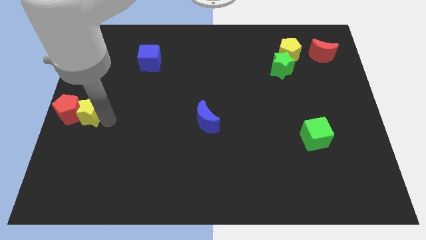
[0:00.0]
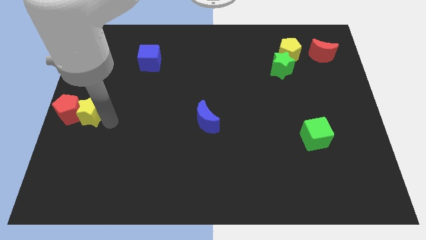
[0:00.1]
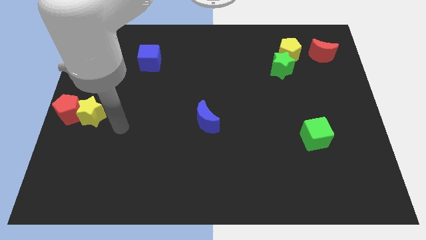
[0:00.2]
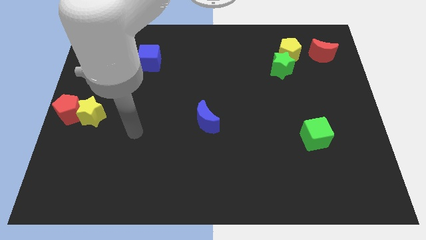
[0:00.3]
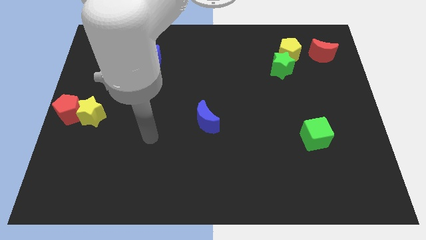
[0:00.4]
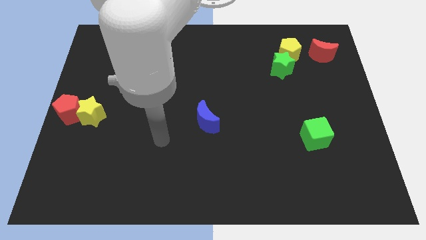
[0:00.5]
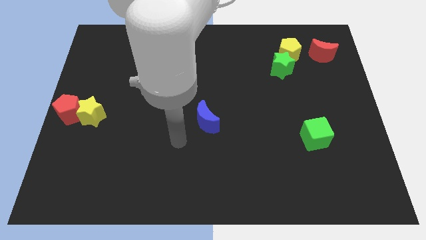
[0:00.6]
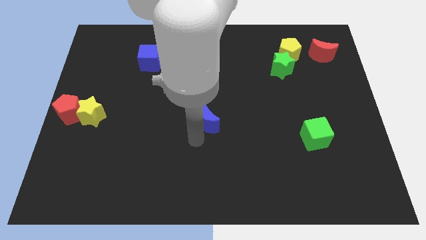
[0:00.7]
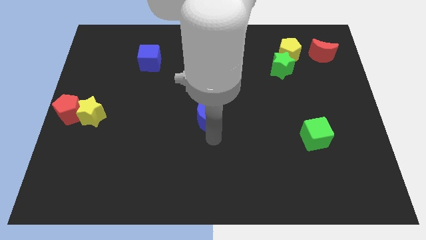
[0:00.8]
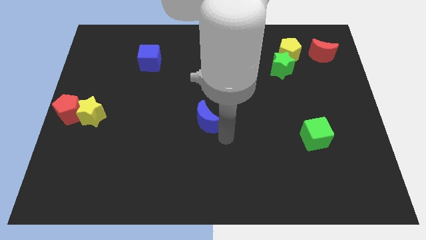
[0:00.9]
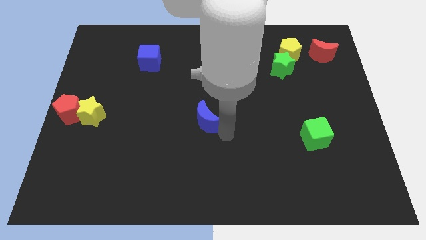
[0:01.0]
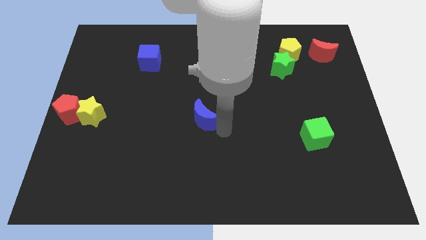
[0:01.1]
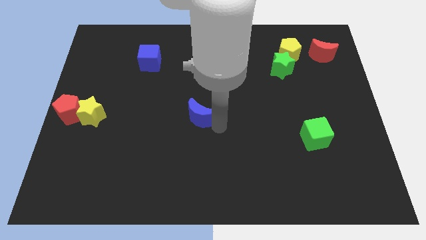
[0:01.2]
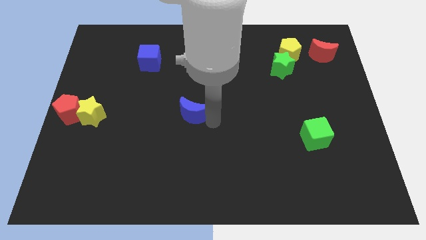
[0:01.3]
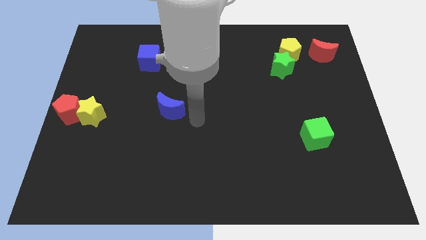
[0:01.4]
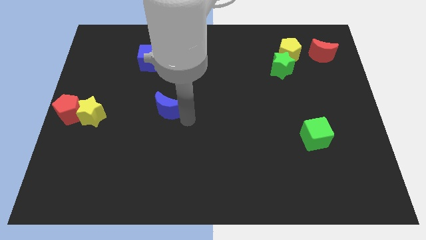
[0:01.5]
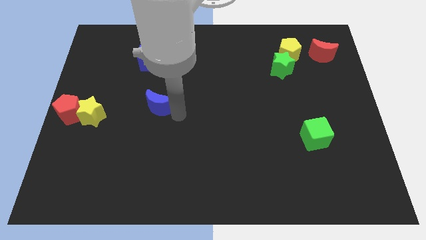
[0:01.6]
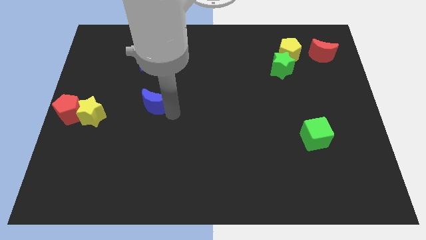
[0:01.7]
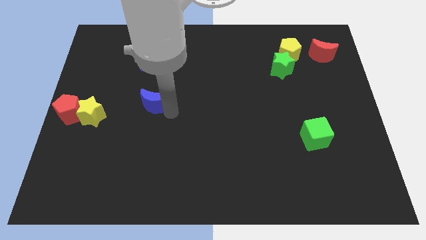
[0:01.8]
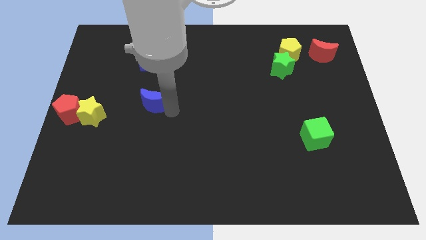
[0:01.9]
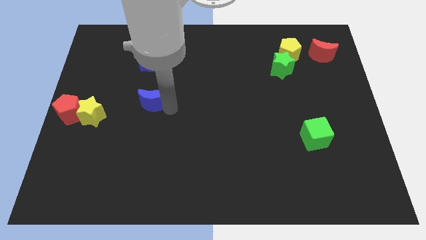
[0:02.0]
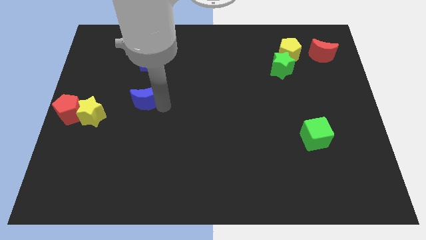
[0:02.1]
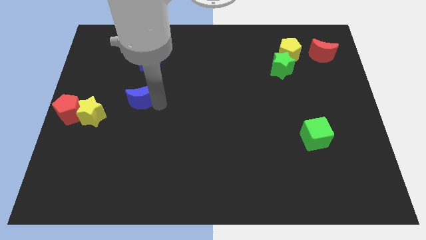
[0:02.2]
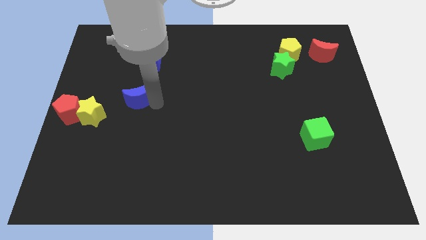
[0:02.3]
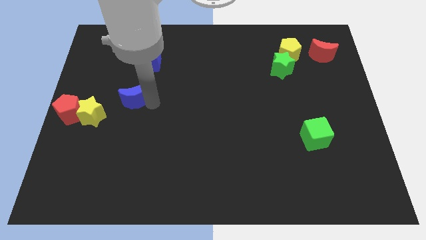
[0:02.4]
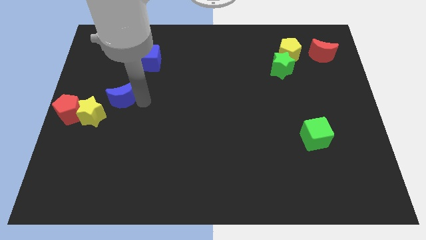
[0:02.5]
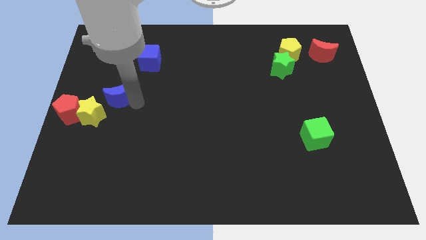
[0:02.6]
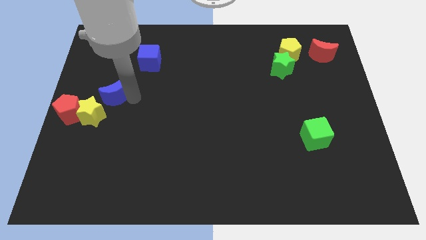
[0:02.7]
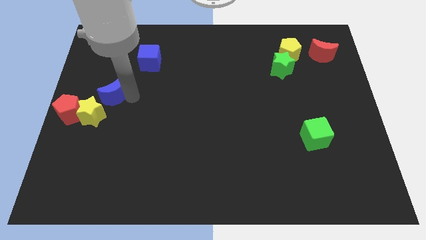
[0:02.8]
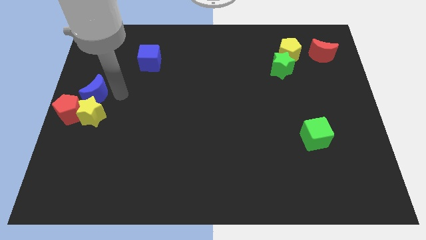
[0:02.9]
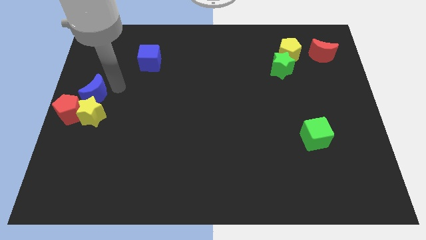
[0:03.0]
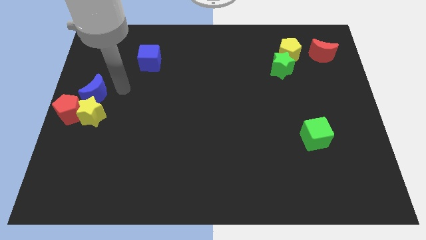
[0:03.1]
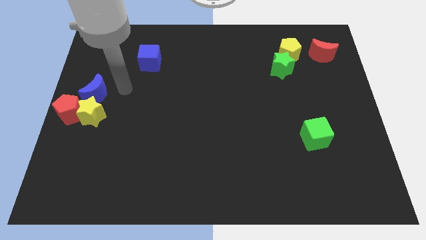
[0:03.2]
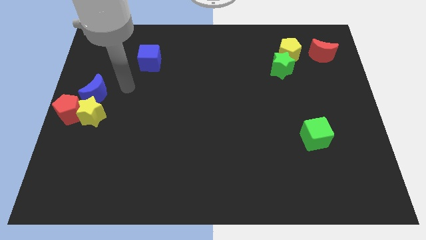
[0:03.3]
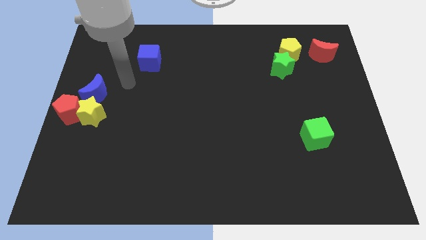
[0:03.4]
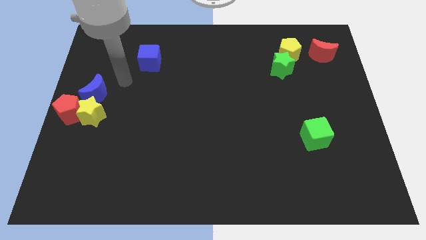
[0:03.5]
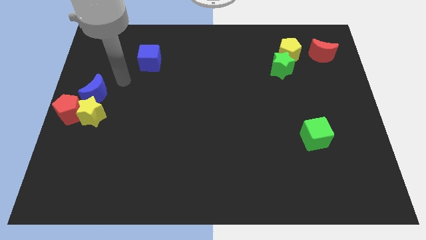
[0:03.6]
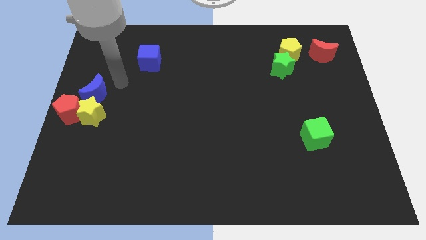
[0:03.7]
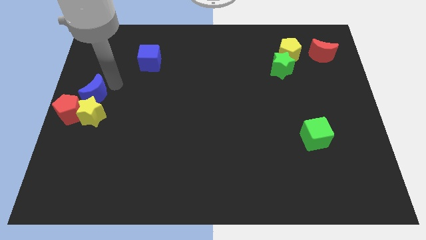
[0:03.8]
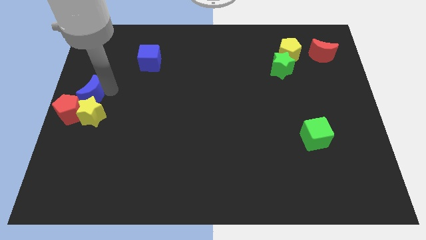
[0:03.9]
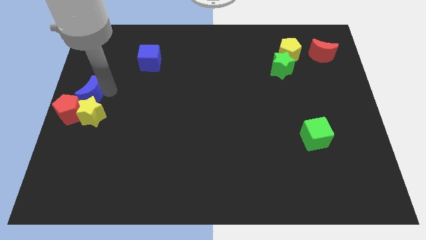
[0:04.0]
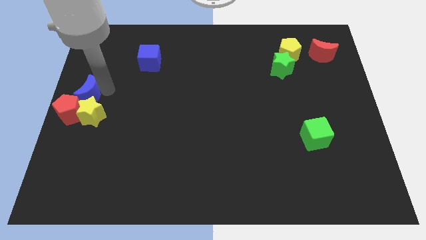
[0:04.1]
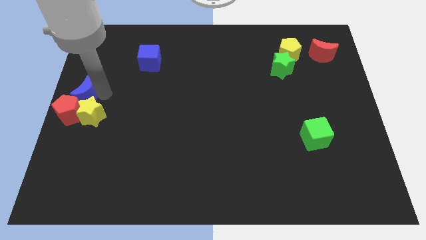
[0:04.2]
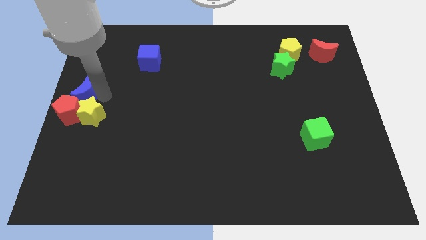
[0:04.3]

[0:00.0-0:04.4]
slide the blue crescent into the top side of the red pentasgon

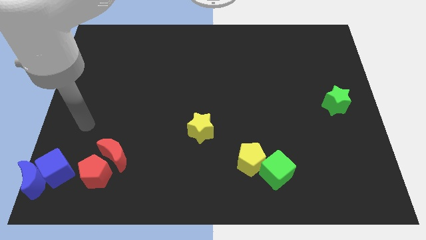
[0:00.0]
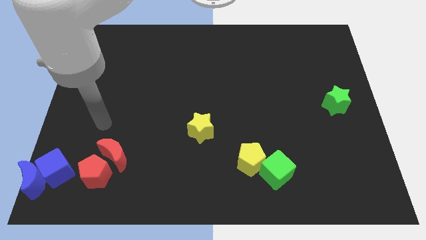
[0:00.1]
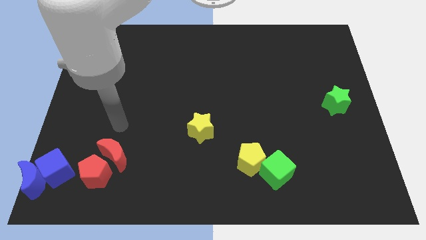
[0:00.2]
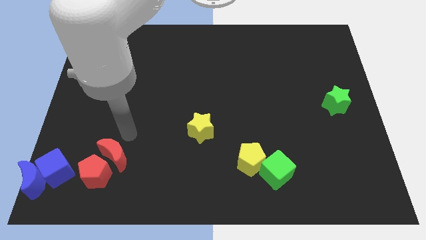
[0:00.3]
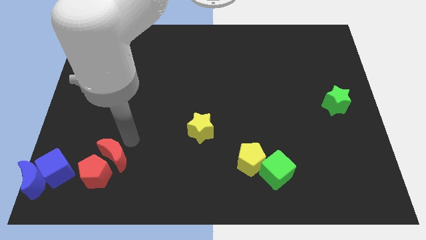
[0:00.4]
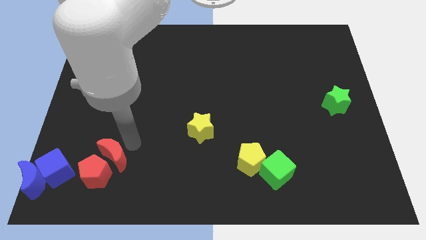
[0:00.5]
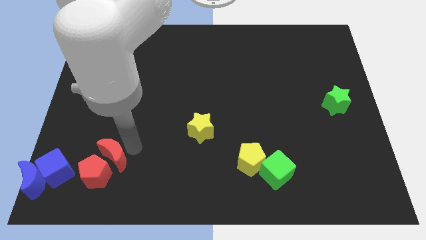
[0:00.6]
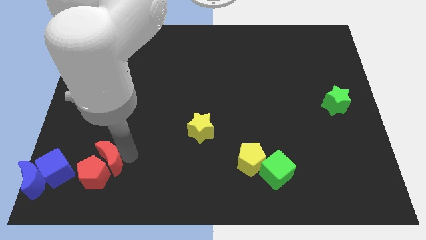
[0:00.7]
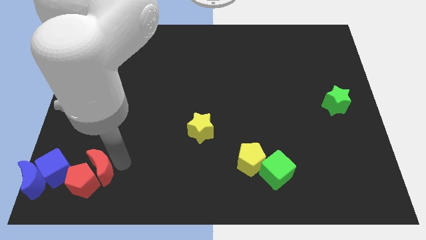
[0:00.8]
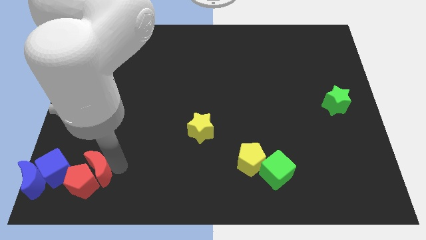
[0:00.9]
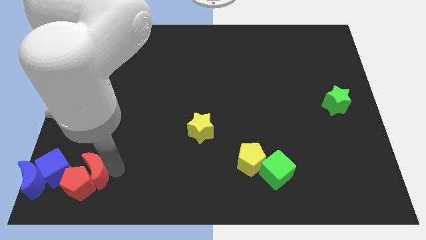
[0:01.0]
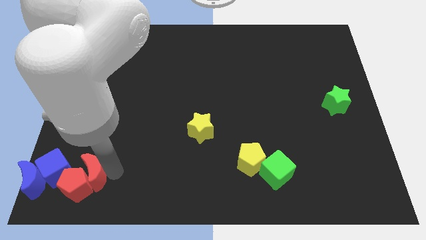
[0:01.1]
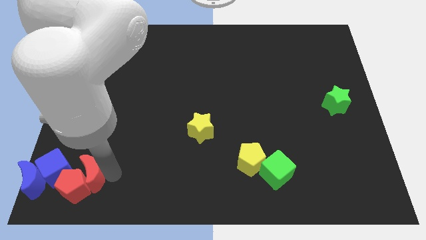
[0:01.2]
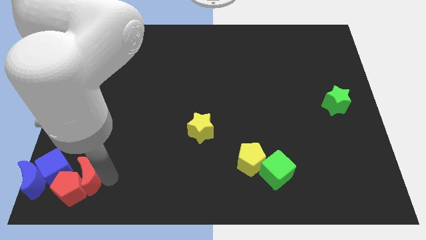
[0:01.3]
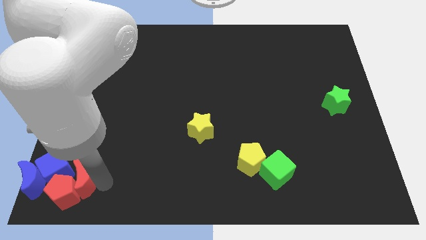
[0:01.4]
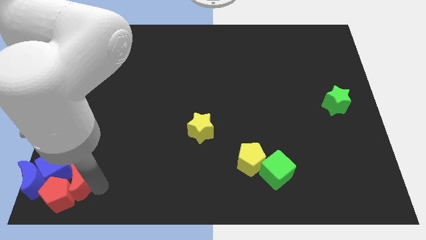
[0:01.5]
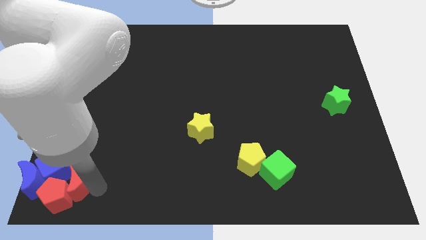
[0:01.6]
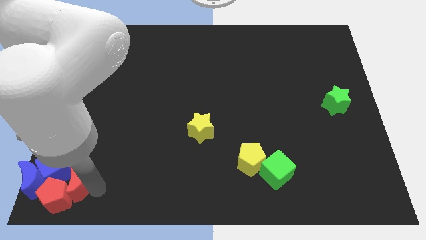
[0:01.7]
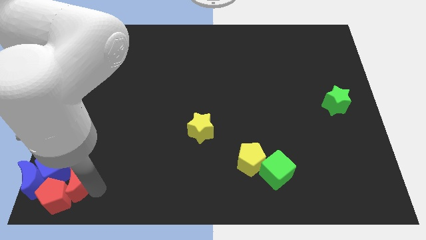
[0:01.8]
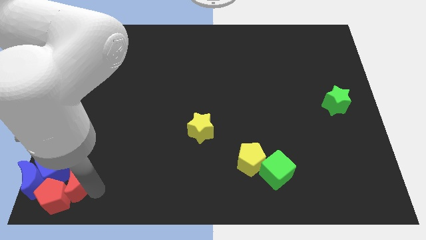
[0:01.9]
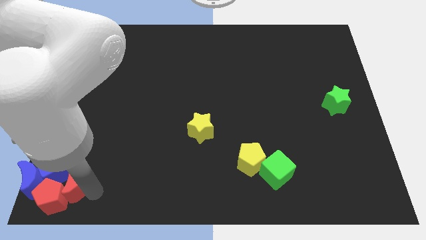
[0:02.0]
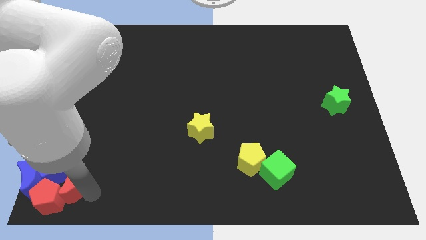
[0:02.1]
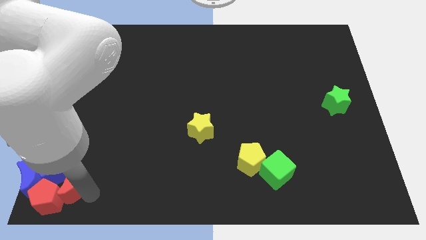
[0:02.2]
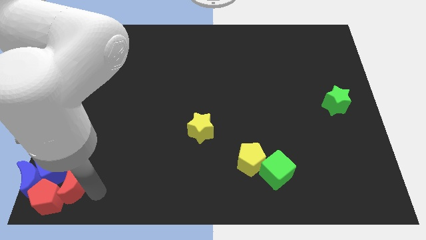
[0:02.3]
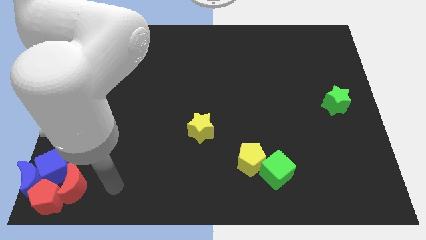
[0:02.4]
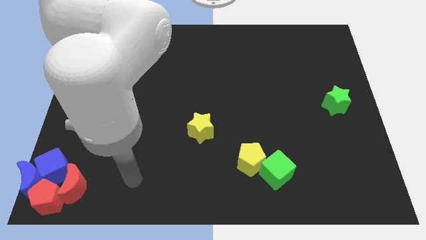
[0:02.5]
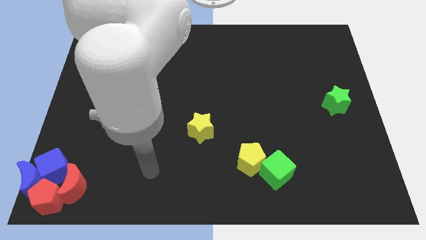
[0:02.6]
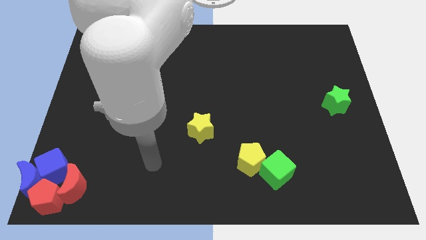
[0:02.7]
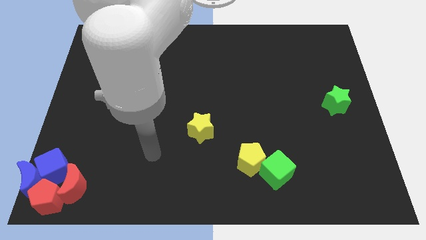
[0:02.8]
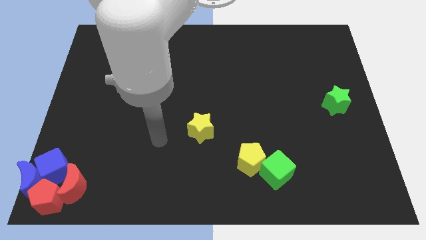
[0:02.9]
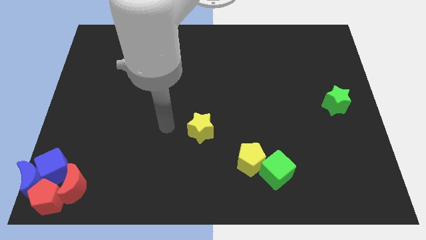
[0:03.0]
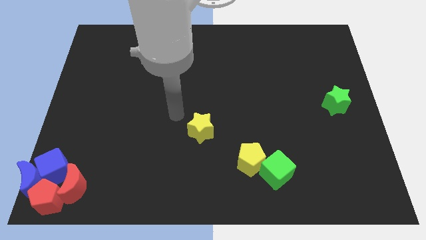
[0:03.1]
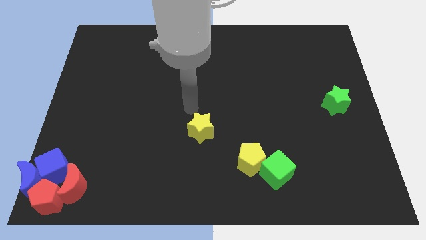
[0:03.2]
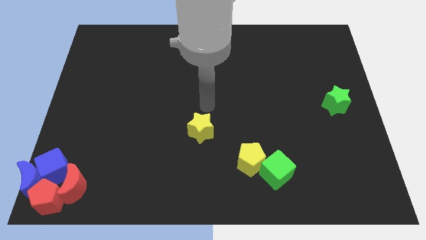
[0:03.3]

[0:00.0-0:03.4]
move the red crescent and red pentagon to the bottom left corner of the board

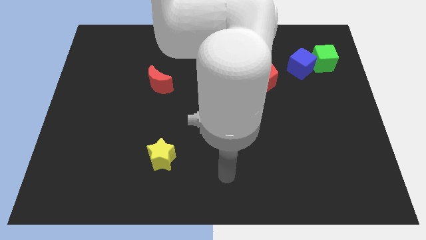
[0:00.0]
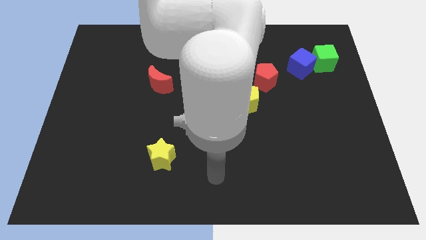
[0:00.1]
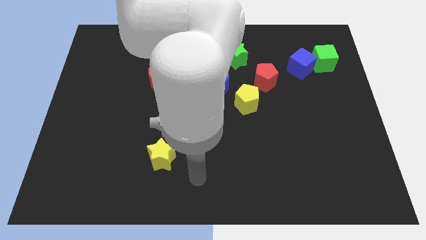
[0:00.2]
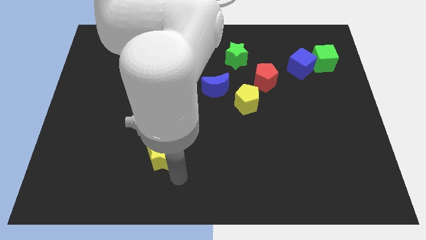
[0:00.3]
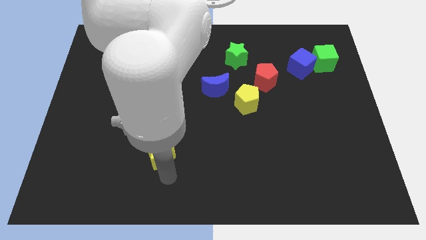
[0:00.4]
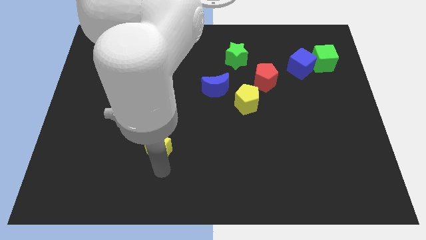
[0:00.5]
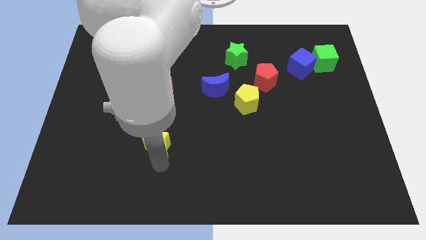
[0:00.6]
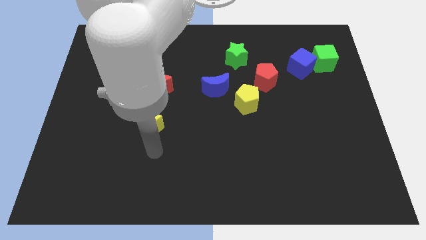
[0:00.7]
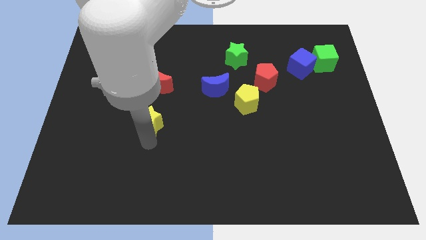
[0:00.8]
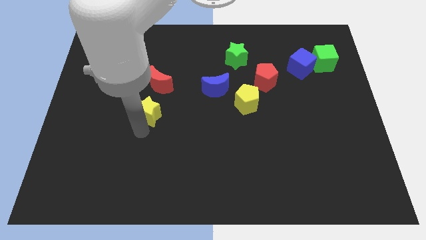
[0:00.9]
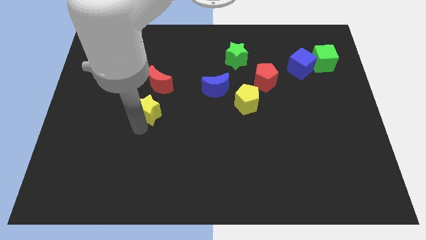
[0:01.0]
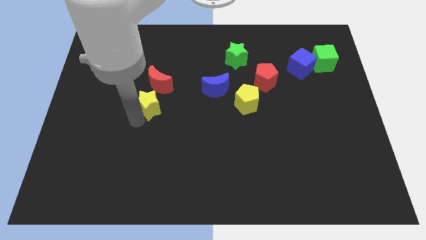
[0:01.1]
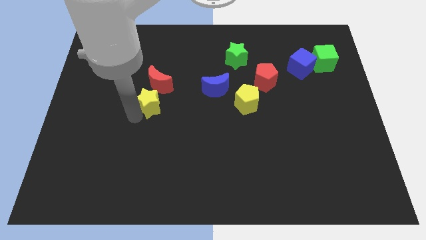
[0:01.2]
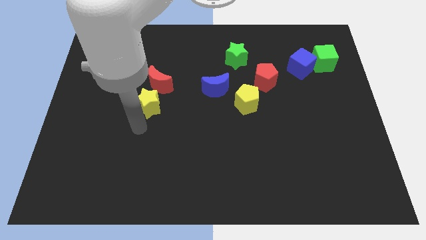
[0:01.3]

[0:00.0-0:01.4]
push the yellow star slightly towards the red crescent
